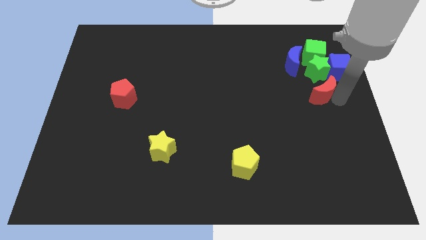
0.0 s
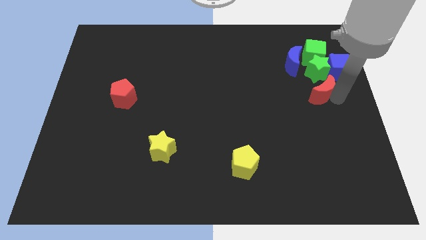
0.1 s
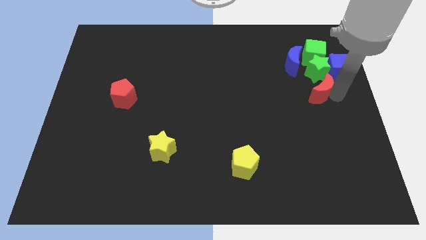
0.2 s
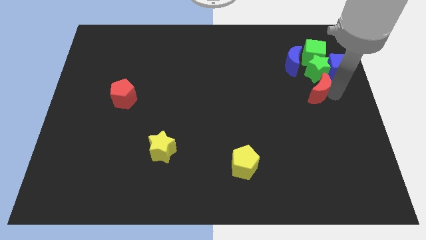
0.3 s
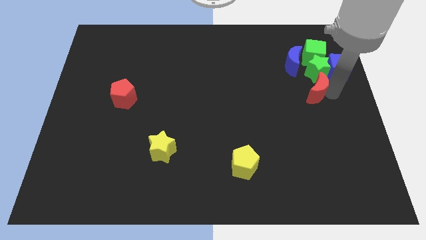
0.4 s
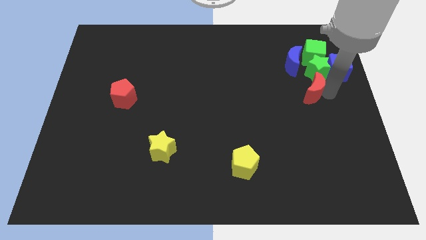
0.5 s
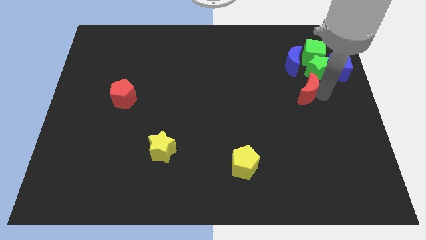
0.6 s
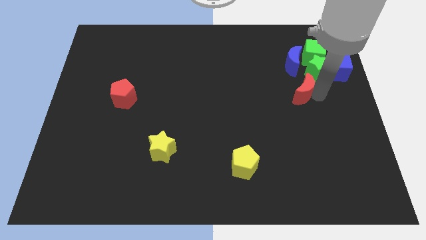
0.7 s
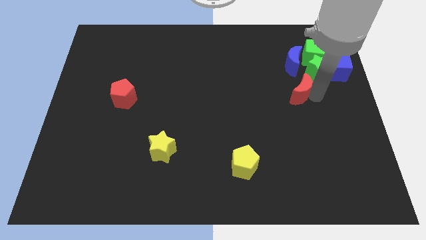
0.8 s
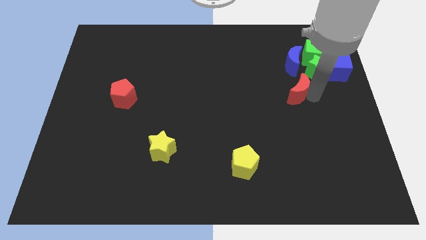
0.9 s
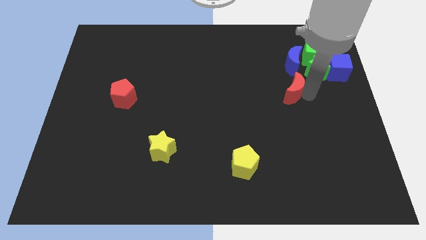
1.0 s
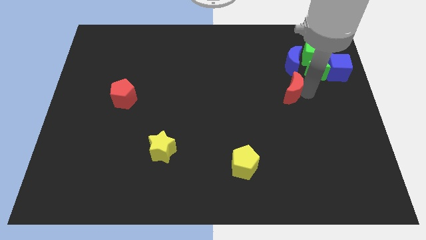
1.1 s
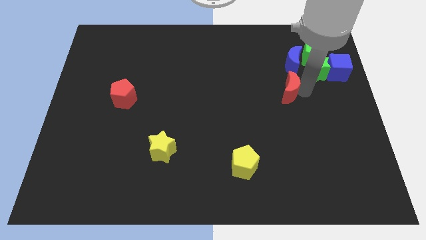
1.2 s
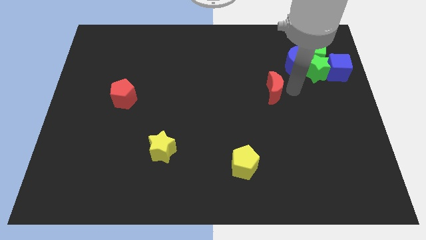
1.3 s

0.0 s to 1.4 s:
slide the red crescent slightly to the left

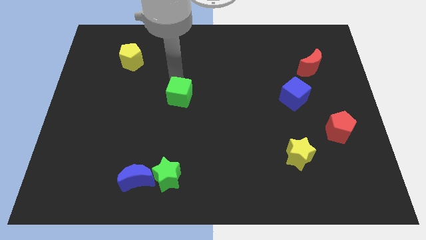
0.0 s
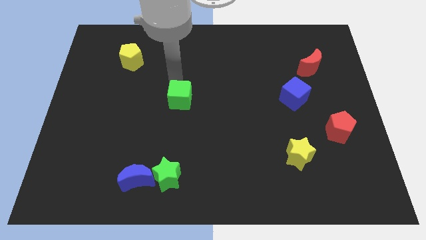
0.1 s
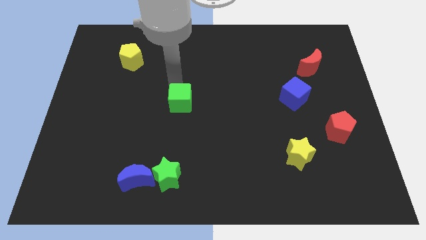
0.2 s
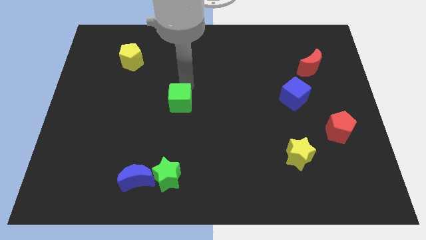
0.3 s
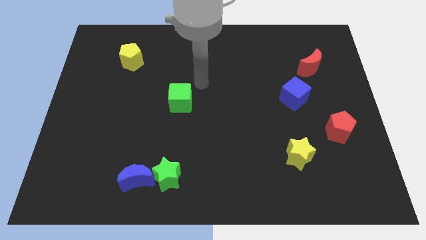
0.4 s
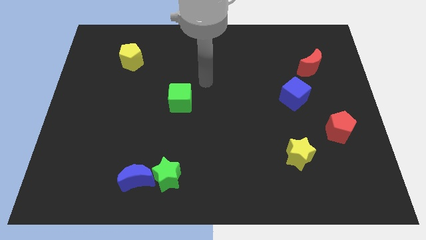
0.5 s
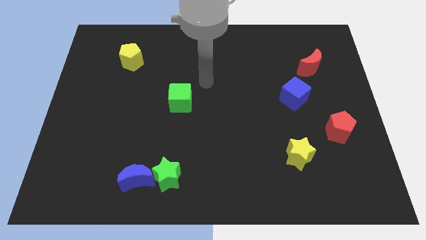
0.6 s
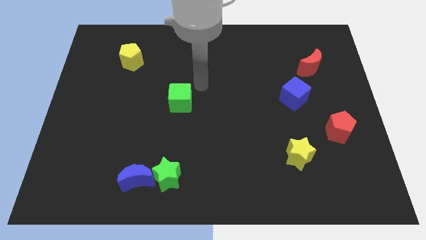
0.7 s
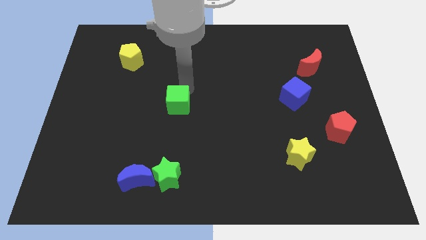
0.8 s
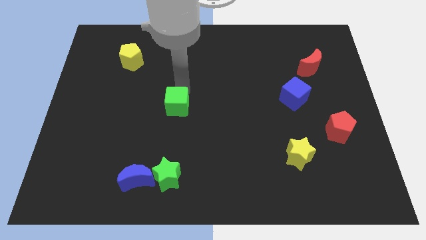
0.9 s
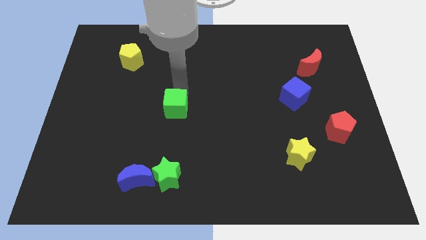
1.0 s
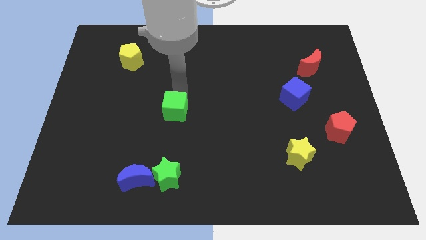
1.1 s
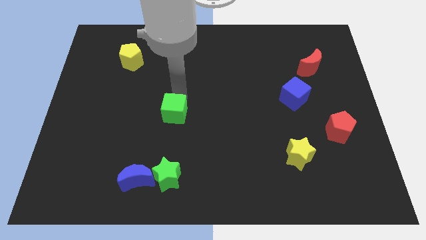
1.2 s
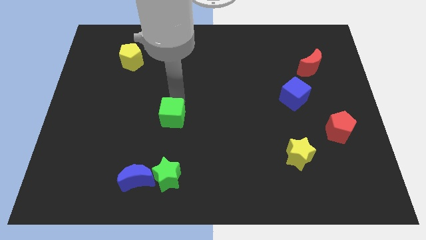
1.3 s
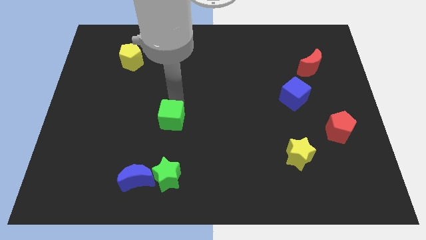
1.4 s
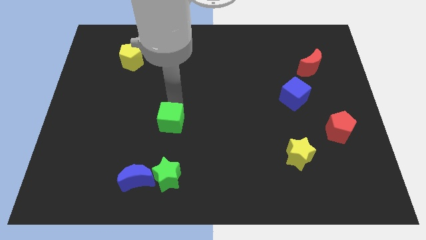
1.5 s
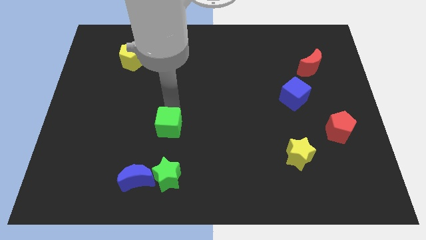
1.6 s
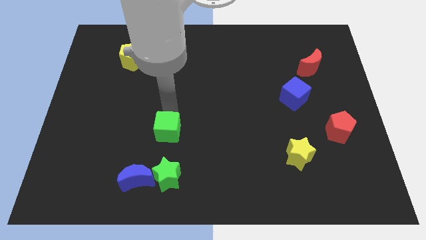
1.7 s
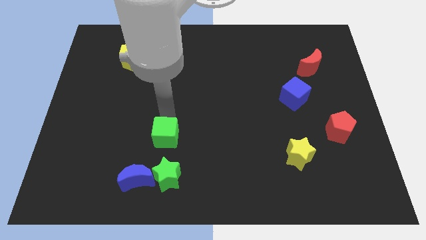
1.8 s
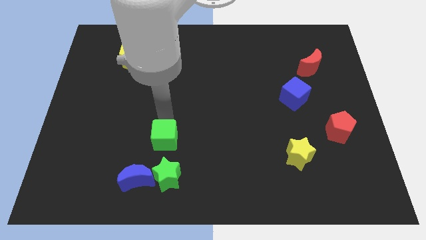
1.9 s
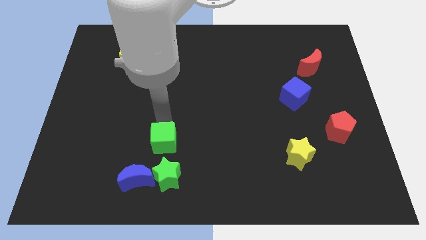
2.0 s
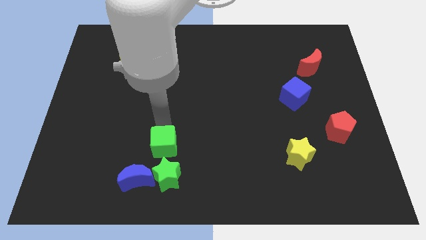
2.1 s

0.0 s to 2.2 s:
push the green cube close to the green star

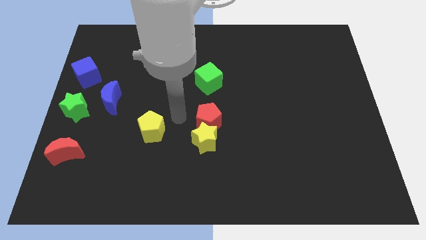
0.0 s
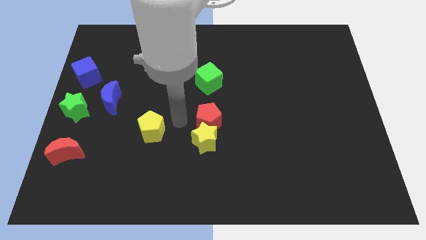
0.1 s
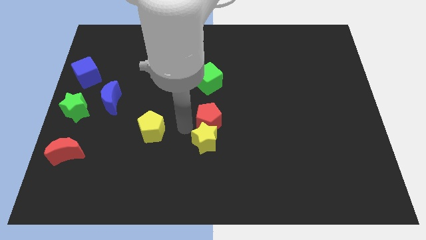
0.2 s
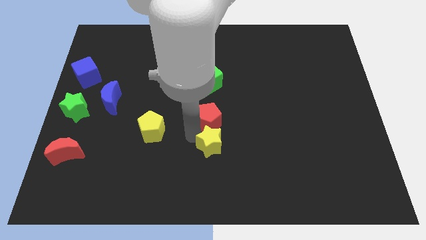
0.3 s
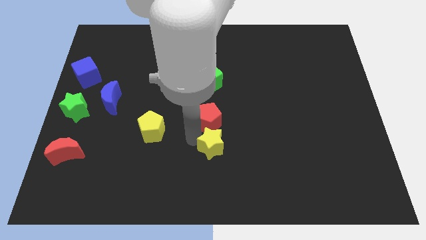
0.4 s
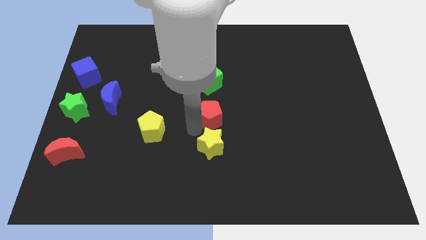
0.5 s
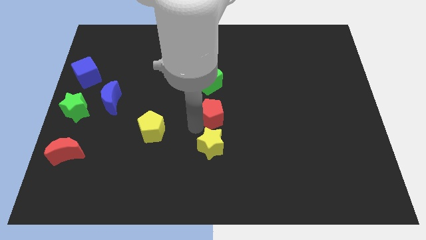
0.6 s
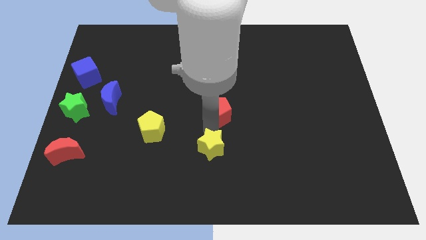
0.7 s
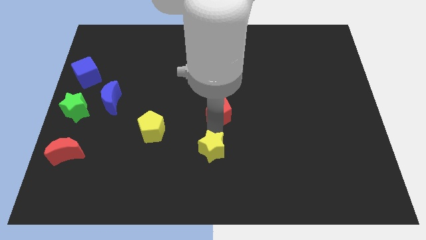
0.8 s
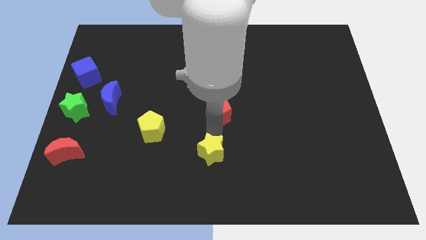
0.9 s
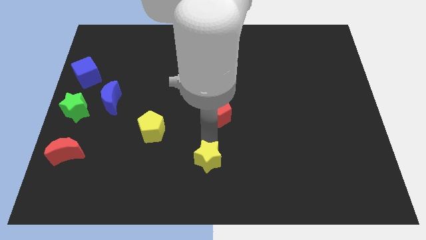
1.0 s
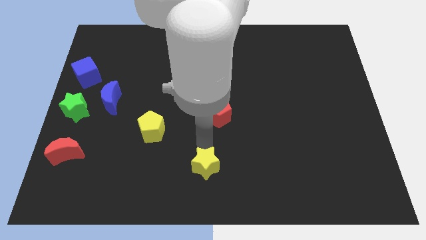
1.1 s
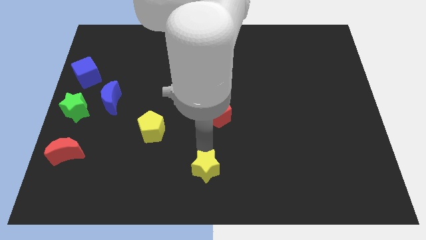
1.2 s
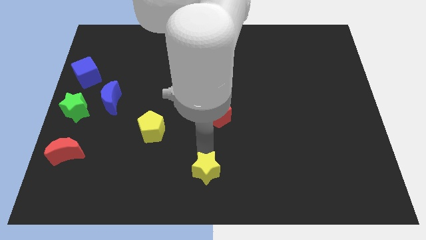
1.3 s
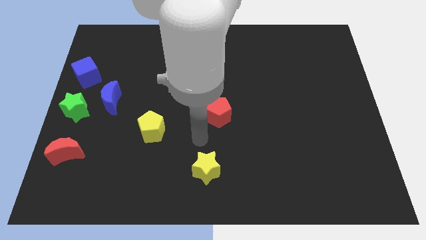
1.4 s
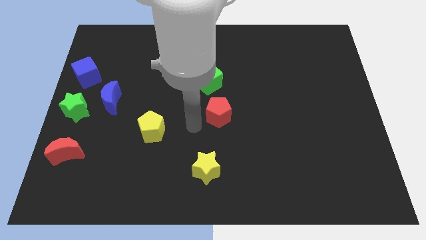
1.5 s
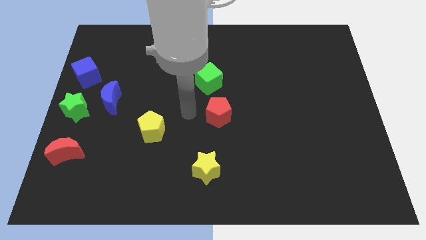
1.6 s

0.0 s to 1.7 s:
push the yellow star away from the red pentagon

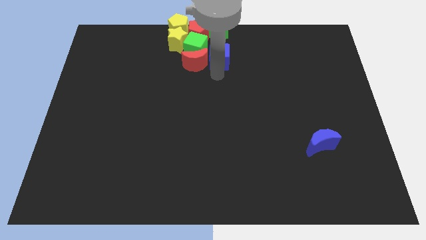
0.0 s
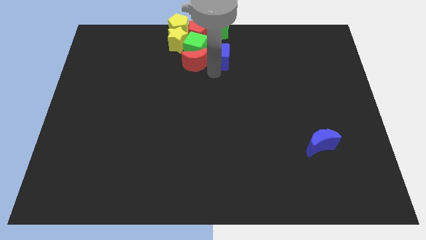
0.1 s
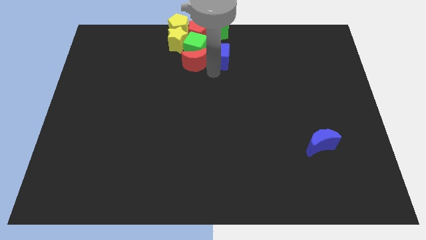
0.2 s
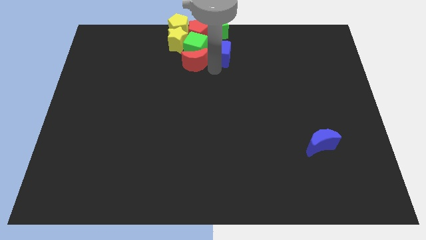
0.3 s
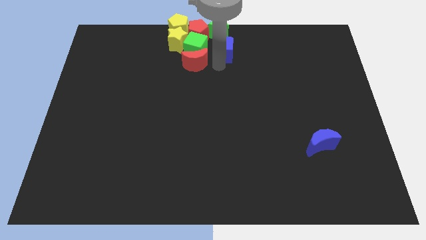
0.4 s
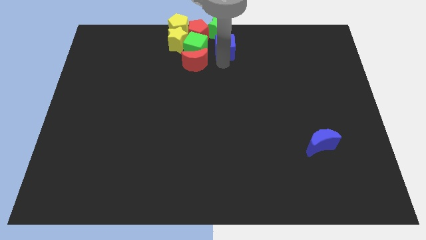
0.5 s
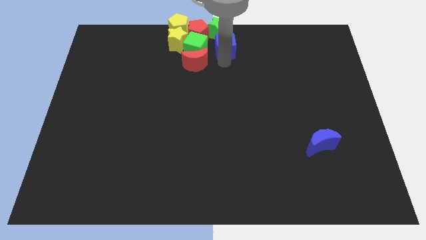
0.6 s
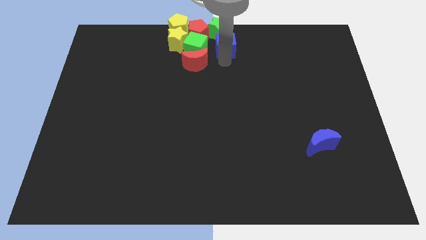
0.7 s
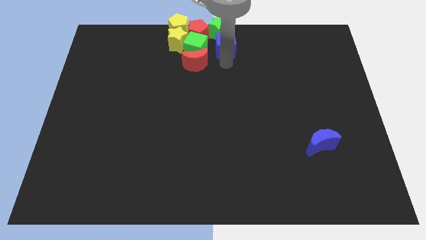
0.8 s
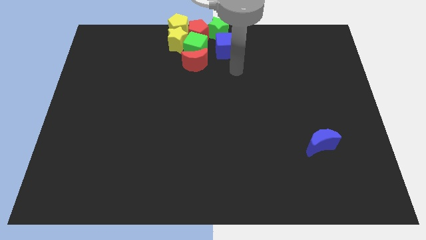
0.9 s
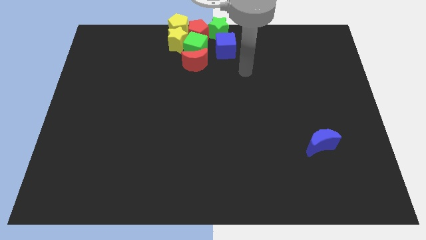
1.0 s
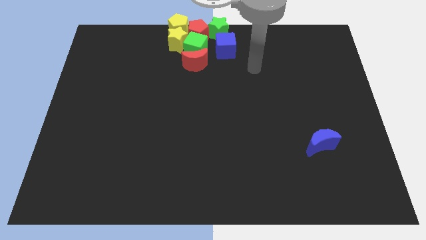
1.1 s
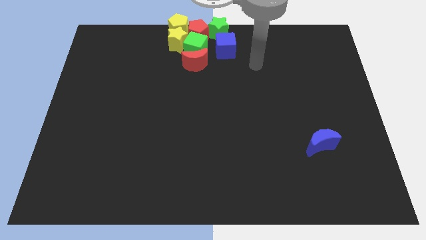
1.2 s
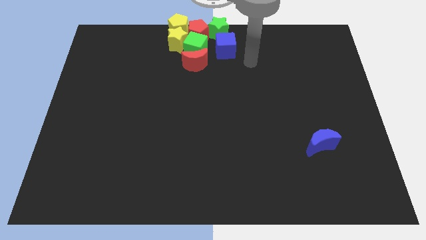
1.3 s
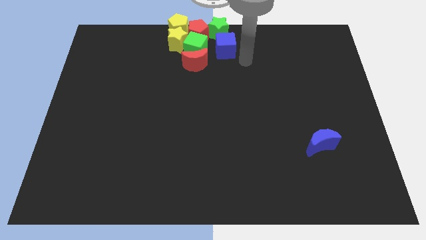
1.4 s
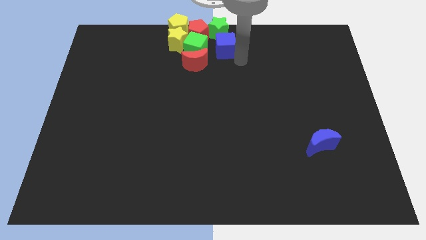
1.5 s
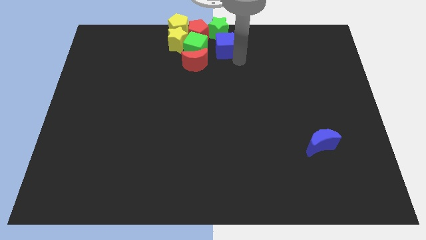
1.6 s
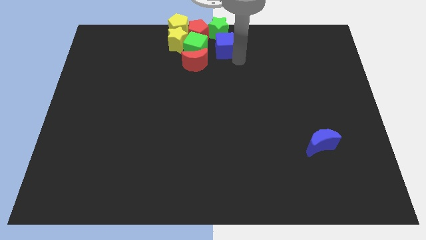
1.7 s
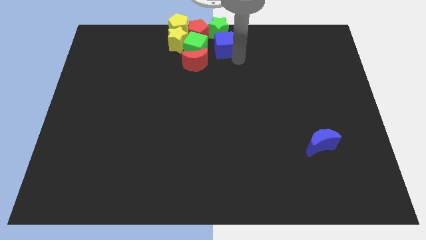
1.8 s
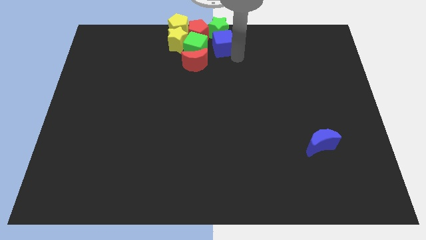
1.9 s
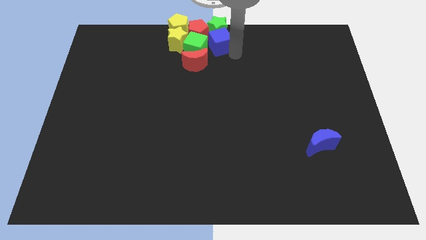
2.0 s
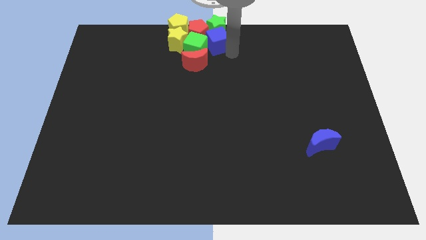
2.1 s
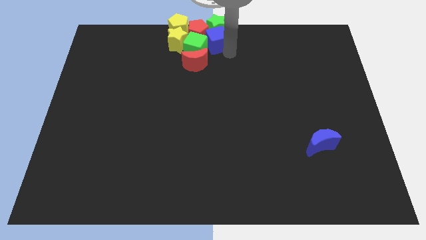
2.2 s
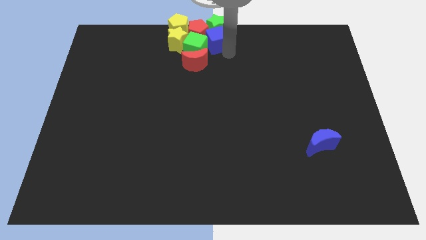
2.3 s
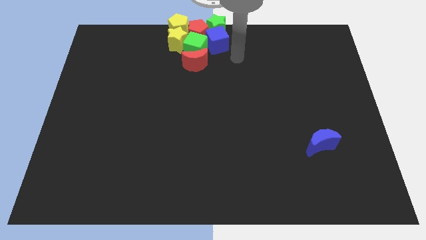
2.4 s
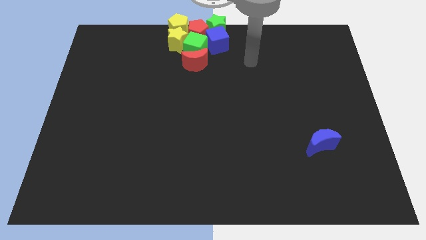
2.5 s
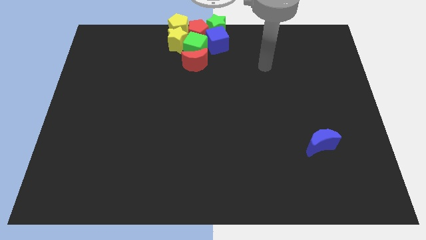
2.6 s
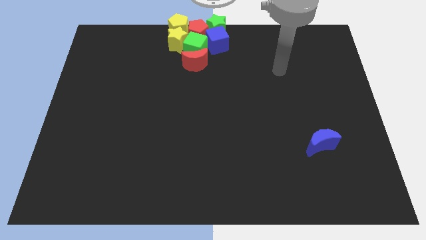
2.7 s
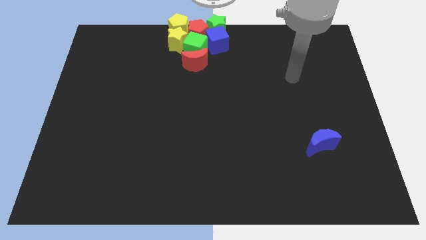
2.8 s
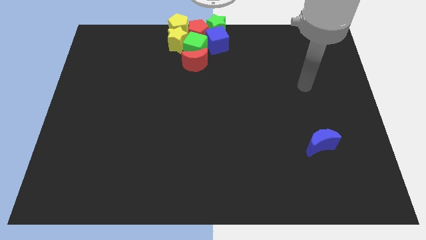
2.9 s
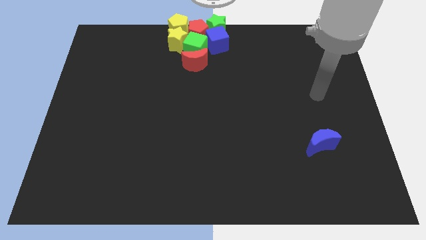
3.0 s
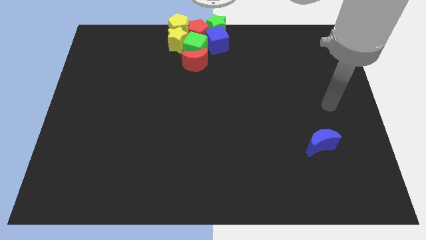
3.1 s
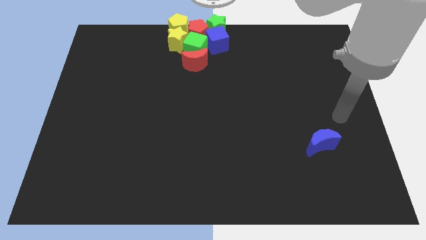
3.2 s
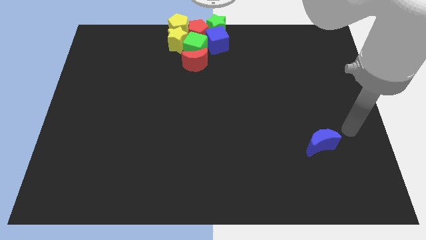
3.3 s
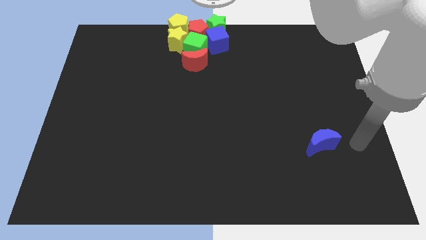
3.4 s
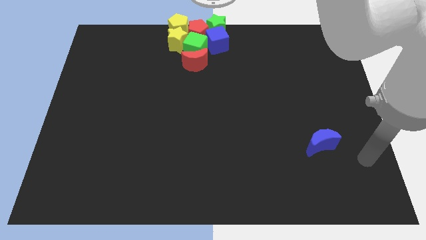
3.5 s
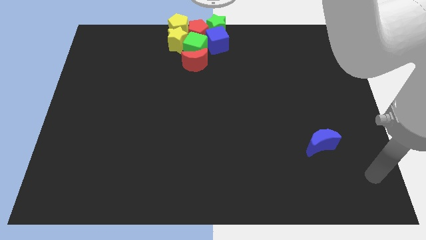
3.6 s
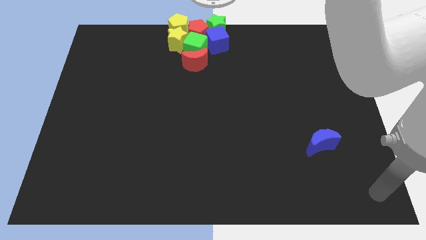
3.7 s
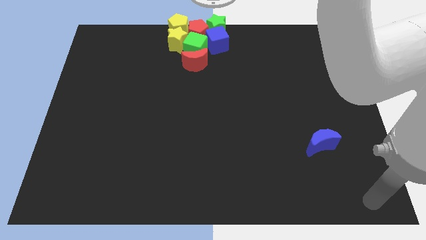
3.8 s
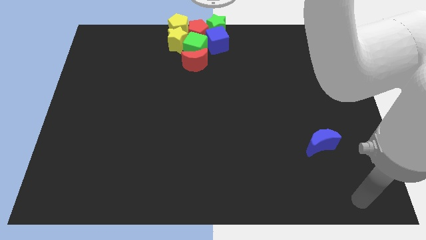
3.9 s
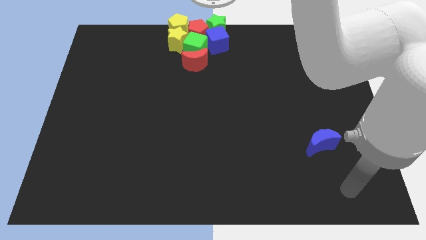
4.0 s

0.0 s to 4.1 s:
place the blue cube at the bottom of the green star
